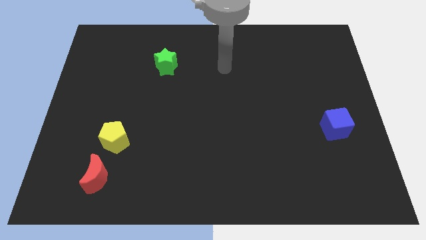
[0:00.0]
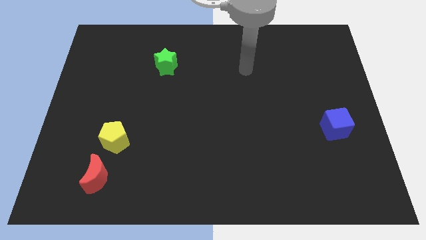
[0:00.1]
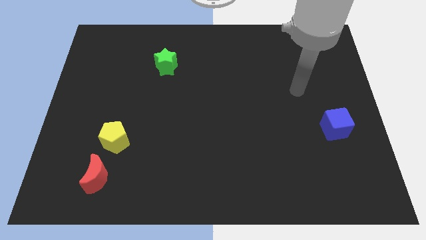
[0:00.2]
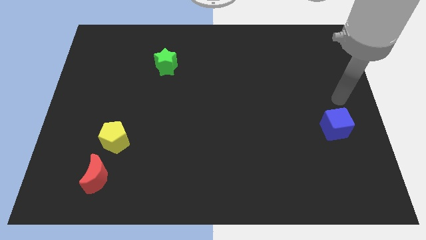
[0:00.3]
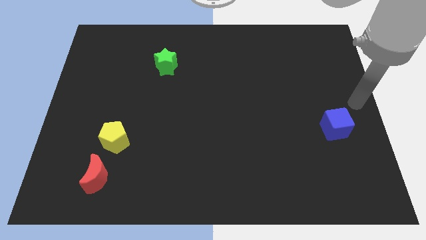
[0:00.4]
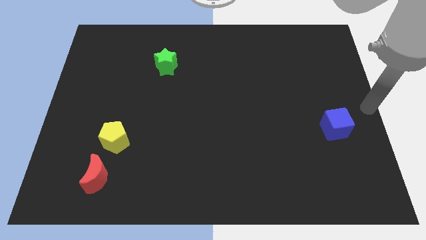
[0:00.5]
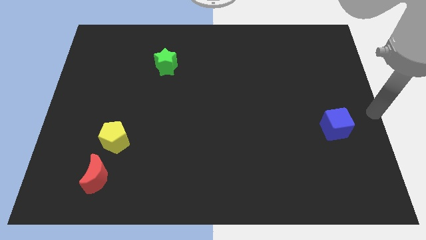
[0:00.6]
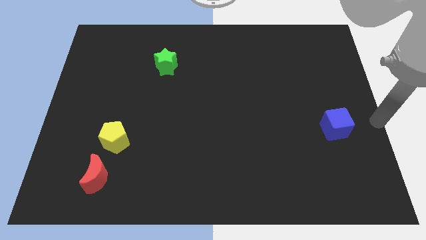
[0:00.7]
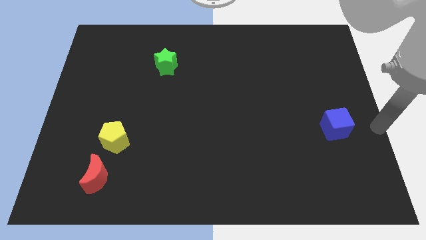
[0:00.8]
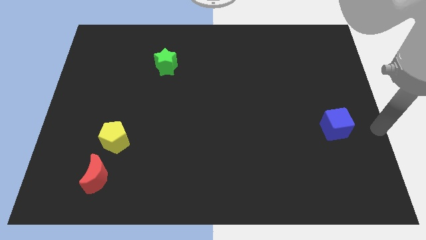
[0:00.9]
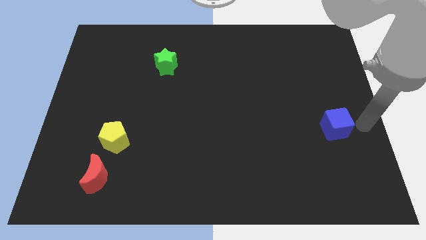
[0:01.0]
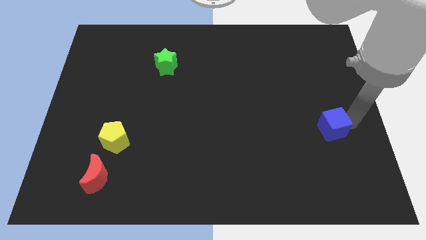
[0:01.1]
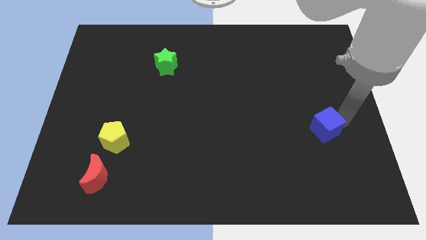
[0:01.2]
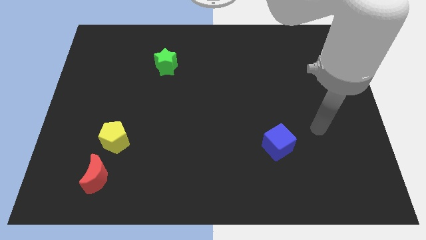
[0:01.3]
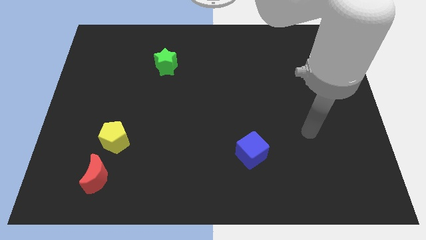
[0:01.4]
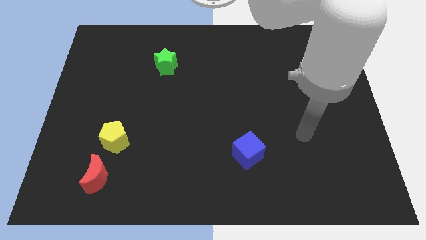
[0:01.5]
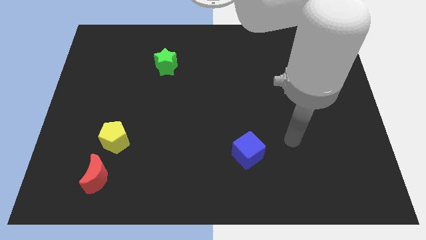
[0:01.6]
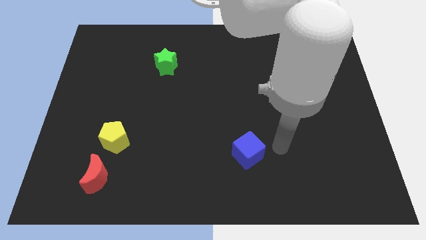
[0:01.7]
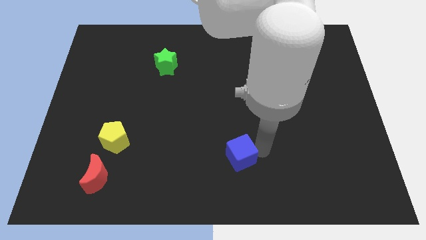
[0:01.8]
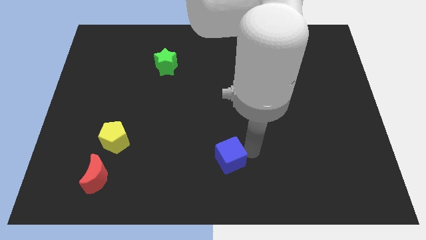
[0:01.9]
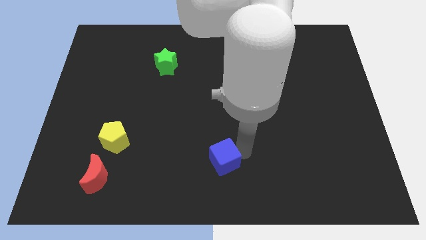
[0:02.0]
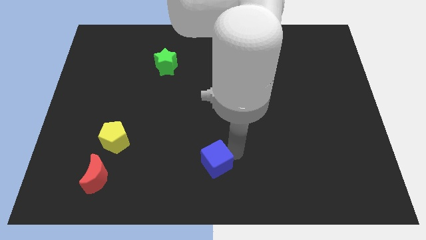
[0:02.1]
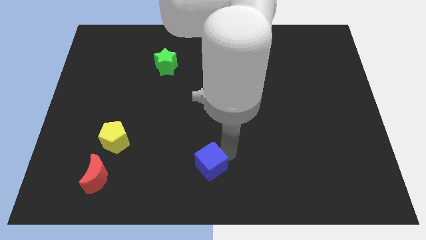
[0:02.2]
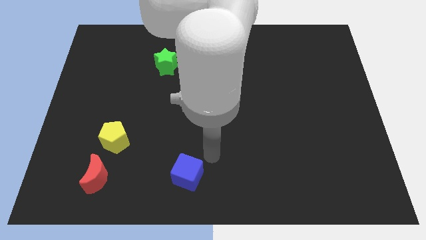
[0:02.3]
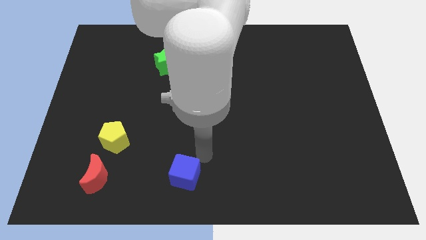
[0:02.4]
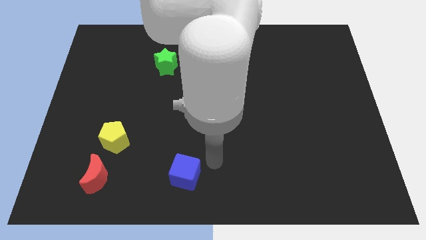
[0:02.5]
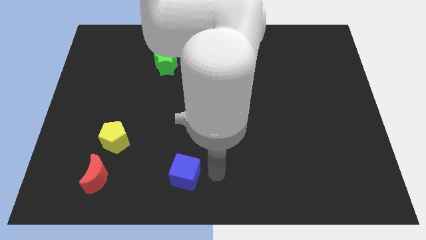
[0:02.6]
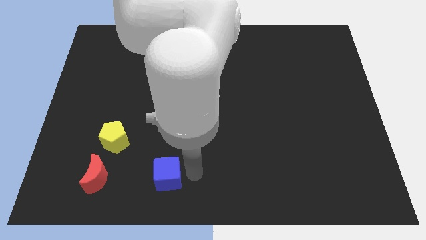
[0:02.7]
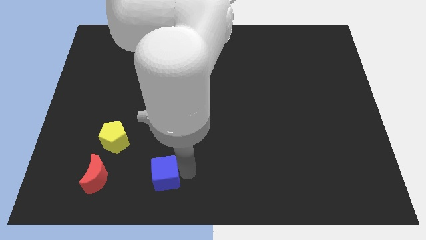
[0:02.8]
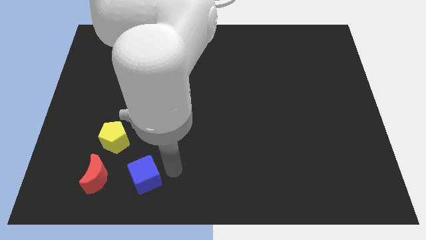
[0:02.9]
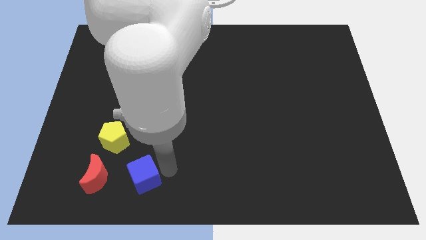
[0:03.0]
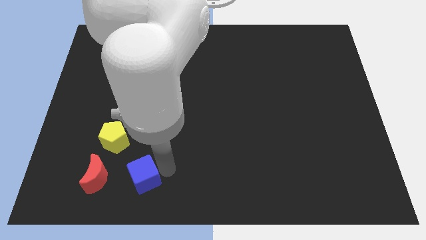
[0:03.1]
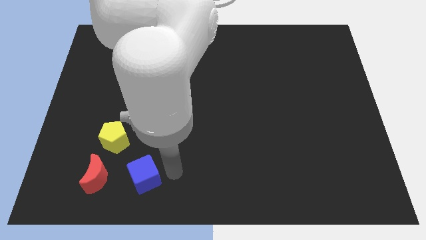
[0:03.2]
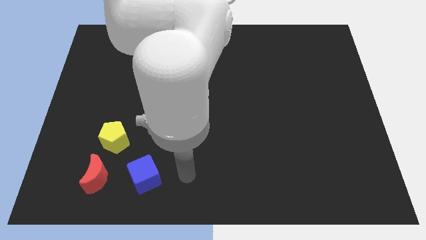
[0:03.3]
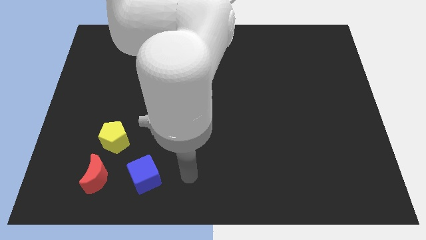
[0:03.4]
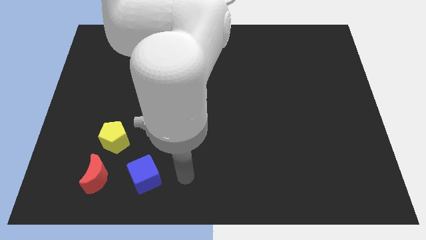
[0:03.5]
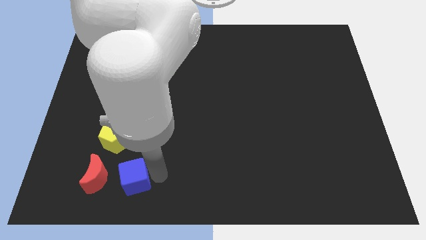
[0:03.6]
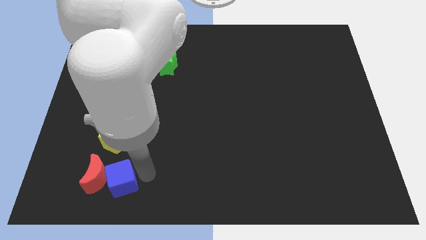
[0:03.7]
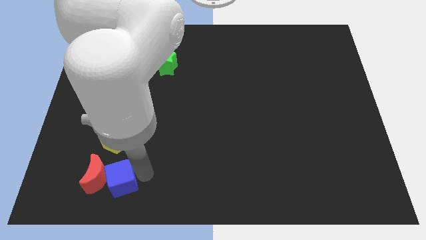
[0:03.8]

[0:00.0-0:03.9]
put the blue cube towards the red moon

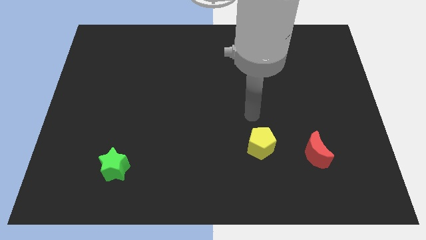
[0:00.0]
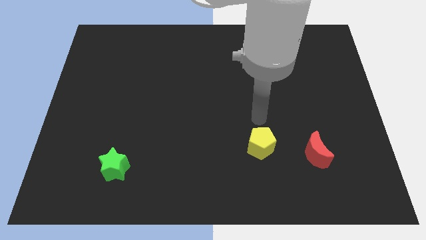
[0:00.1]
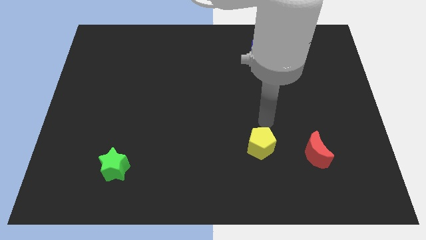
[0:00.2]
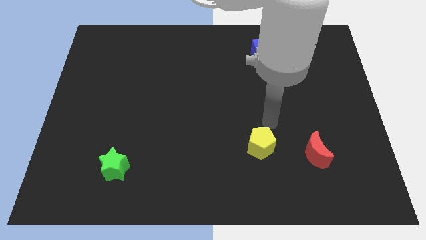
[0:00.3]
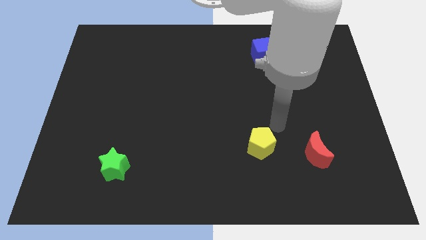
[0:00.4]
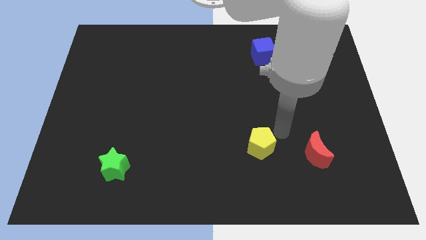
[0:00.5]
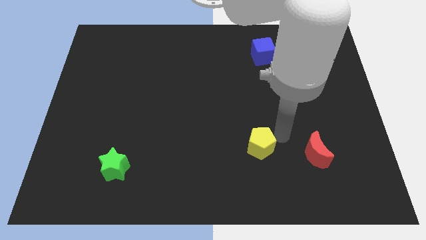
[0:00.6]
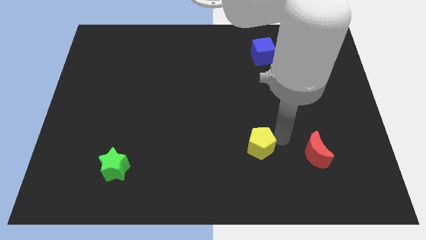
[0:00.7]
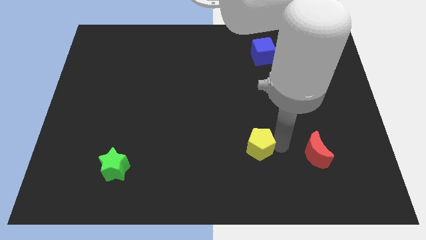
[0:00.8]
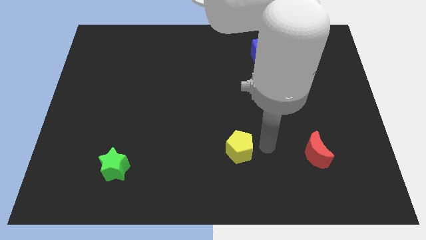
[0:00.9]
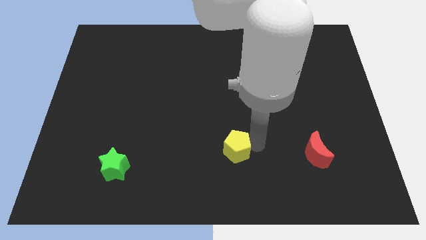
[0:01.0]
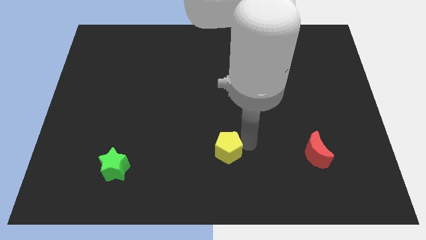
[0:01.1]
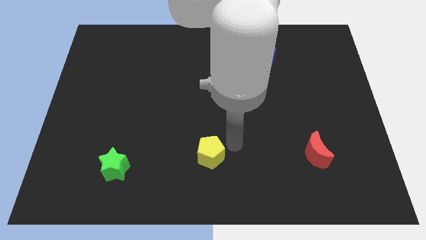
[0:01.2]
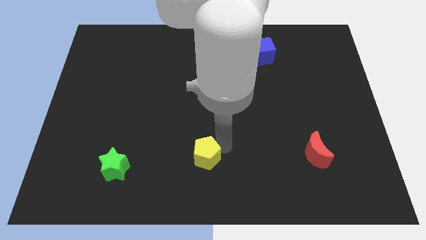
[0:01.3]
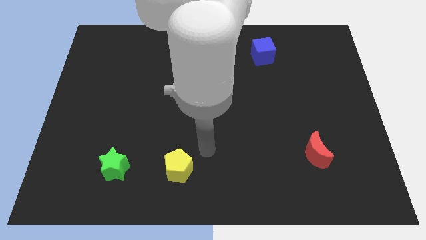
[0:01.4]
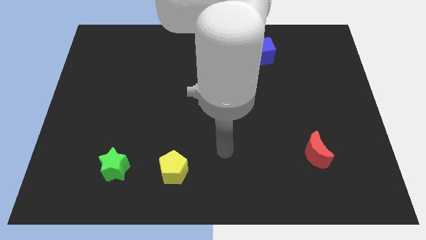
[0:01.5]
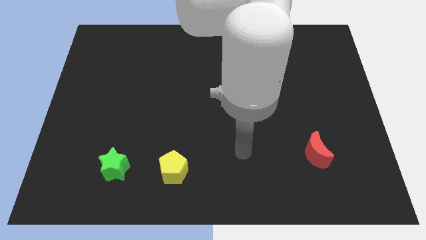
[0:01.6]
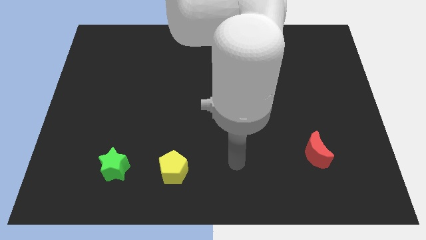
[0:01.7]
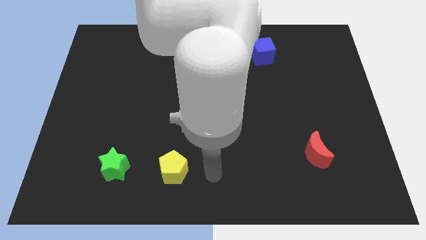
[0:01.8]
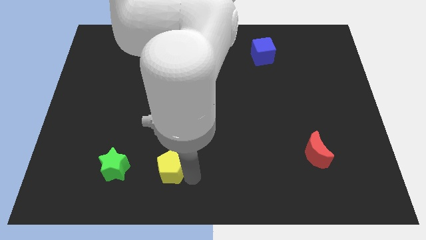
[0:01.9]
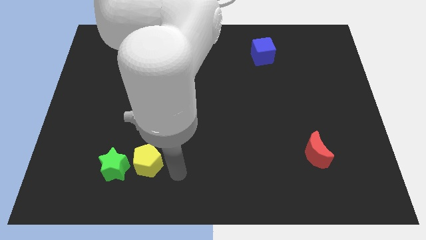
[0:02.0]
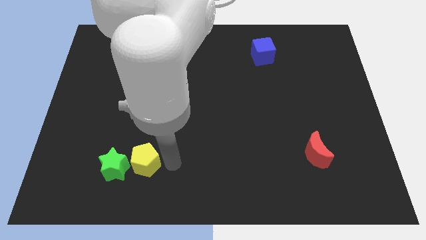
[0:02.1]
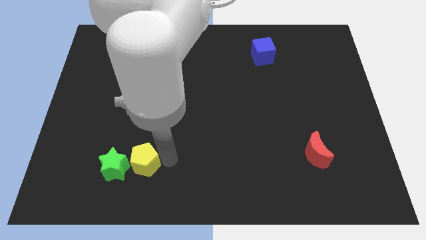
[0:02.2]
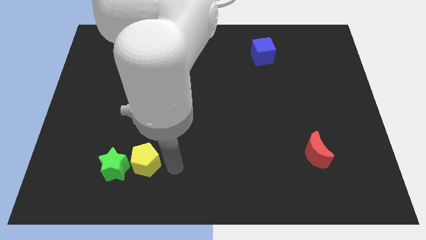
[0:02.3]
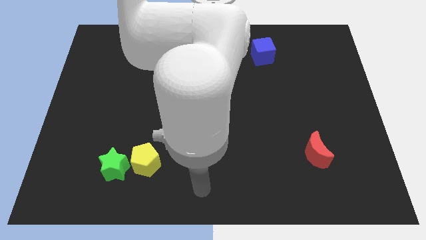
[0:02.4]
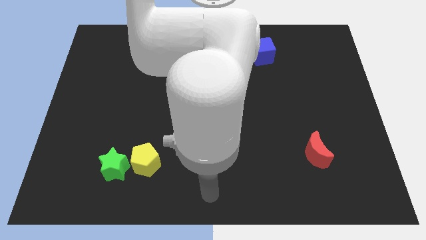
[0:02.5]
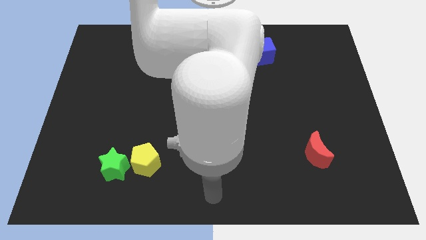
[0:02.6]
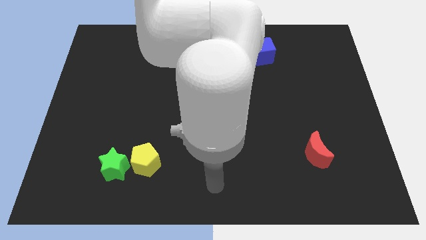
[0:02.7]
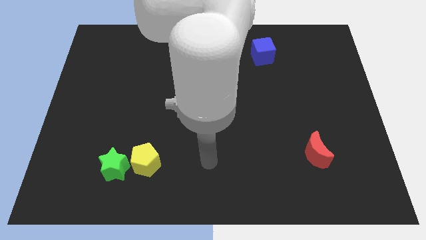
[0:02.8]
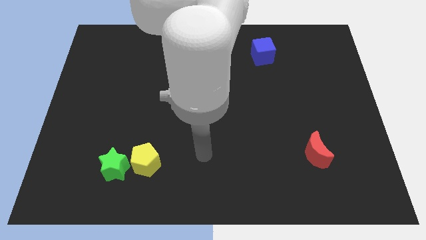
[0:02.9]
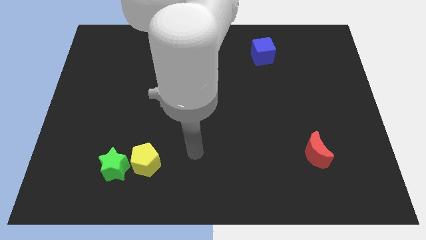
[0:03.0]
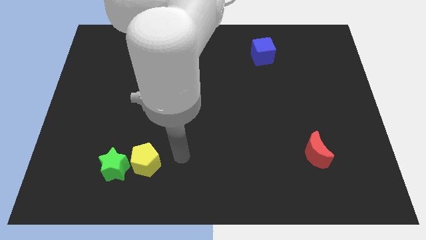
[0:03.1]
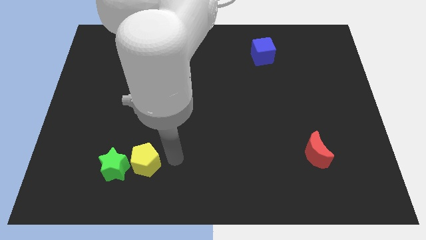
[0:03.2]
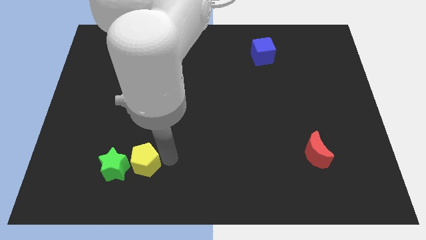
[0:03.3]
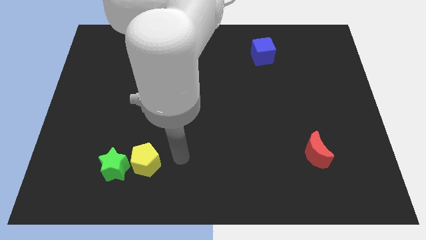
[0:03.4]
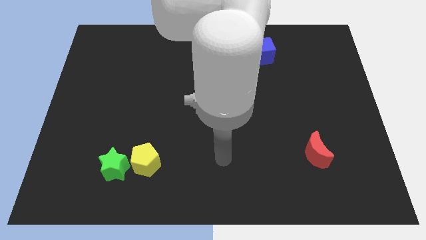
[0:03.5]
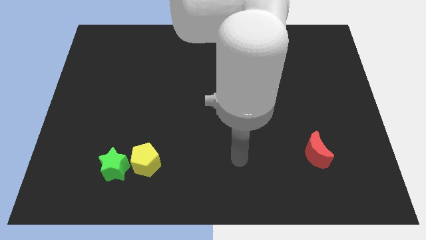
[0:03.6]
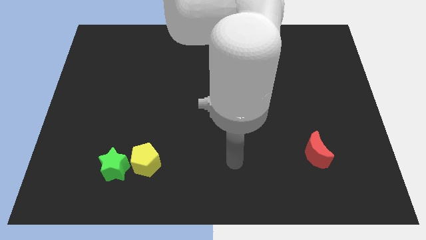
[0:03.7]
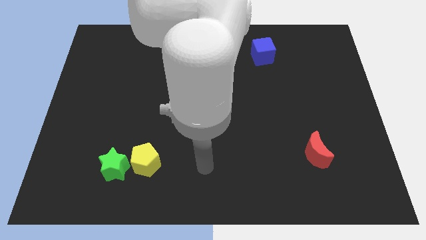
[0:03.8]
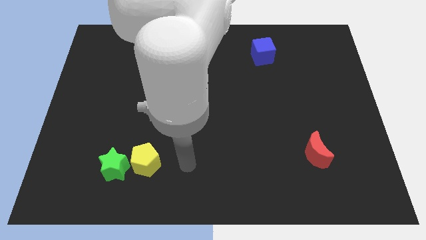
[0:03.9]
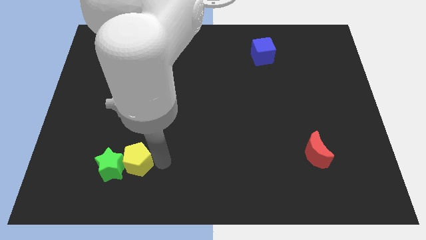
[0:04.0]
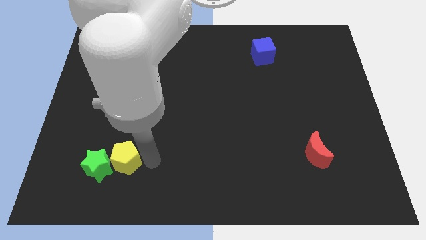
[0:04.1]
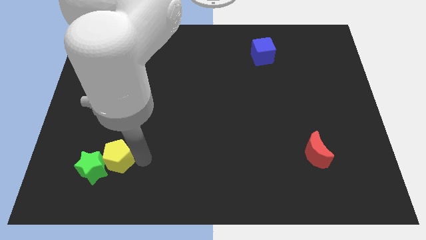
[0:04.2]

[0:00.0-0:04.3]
move the yellow pentagon towards the star
